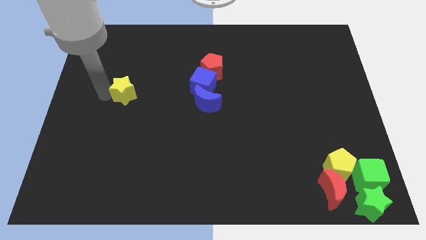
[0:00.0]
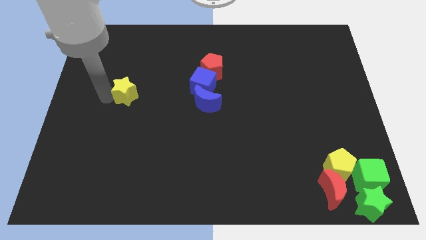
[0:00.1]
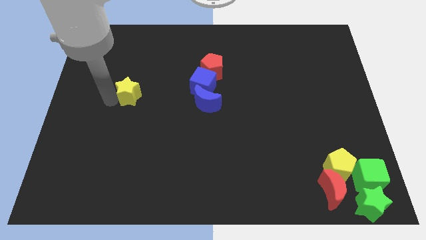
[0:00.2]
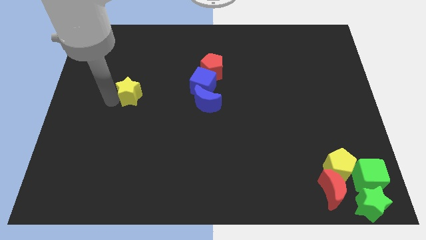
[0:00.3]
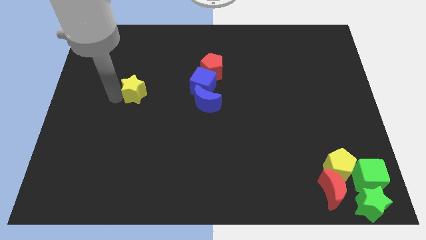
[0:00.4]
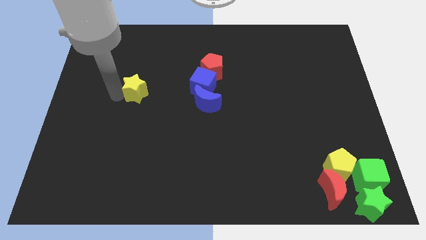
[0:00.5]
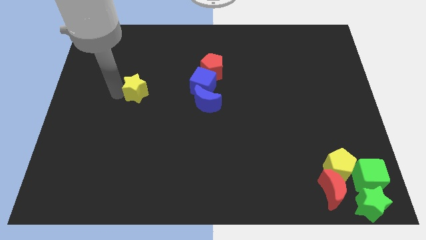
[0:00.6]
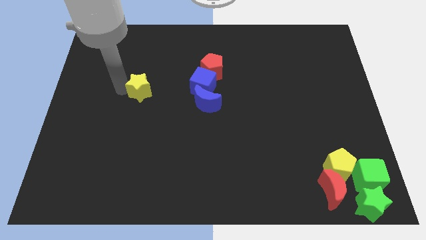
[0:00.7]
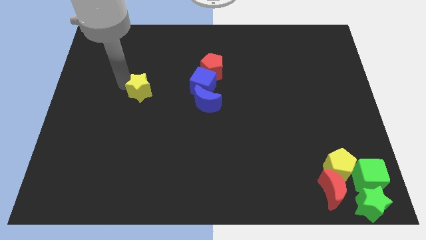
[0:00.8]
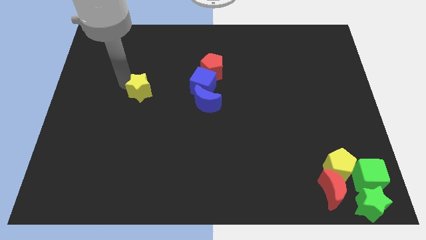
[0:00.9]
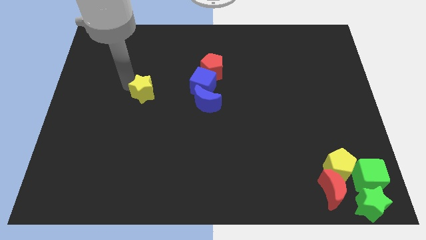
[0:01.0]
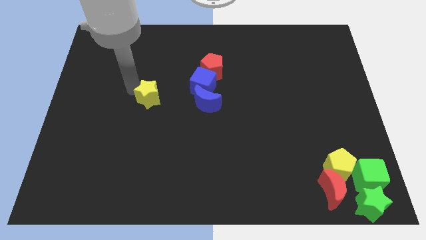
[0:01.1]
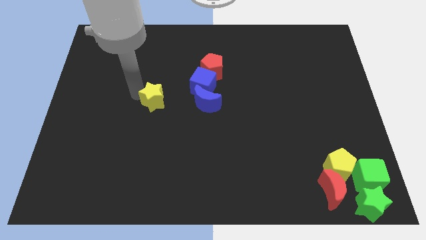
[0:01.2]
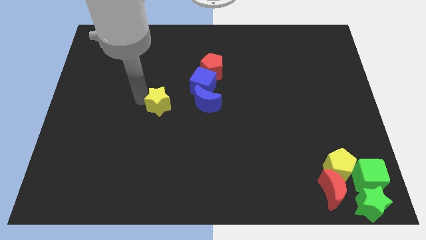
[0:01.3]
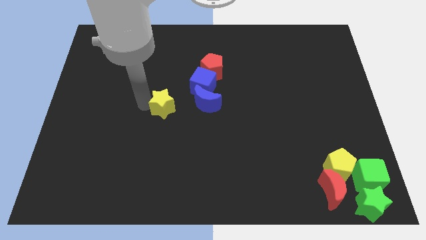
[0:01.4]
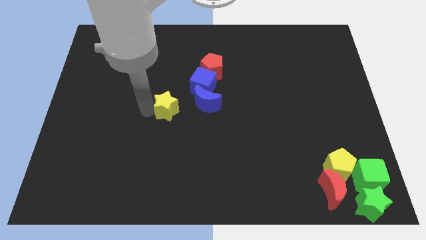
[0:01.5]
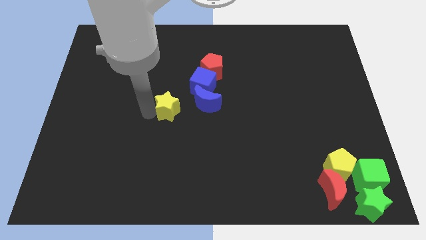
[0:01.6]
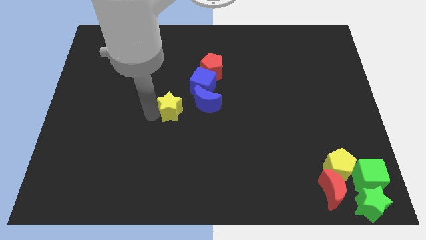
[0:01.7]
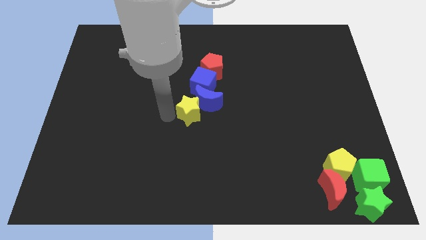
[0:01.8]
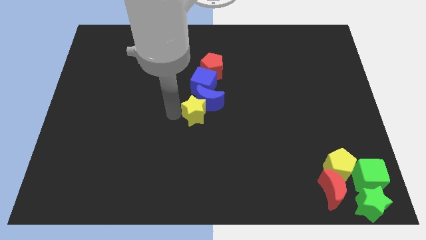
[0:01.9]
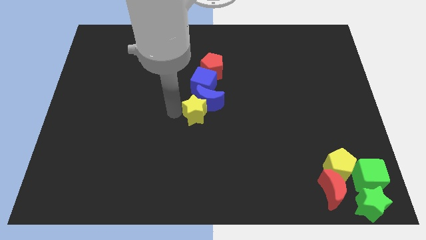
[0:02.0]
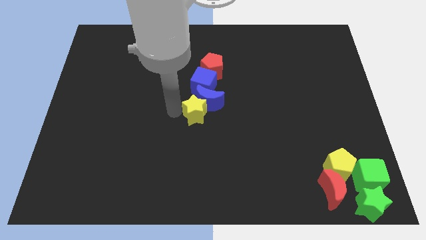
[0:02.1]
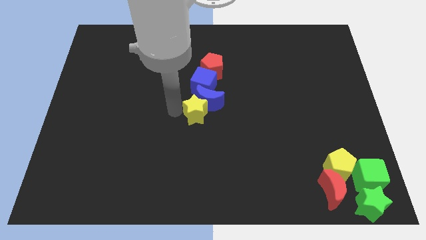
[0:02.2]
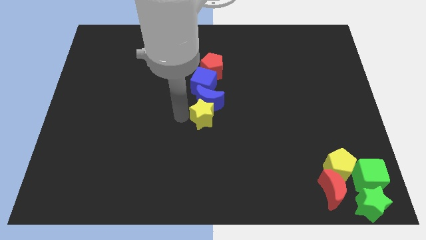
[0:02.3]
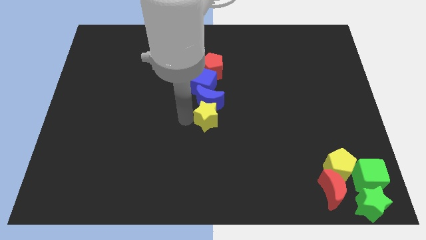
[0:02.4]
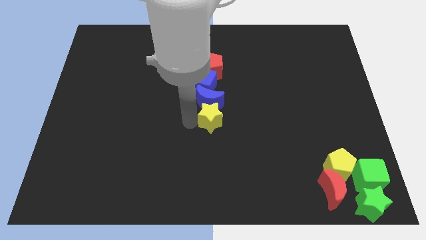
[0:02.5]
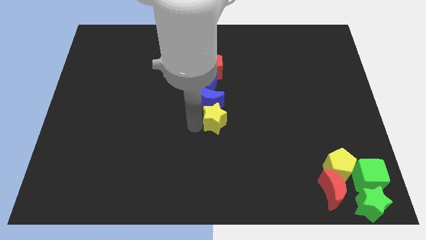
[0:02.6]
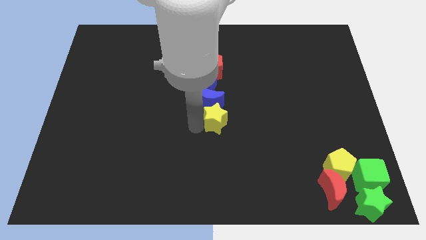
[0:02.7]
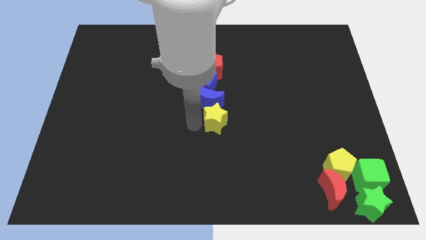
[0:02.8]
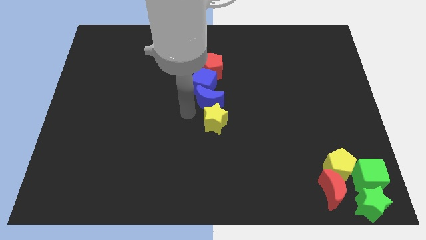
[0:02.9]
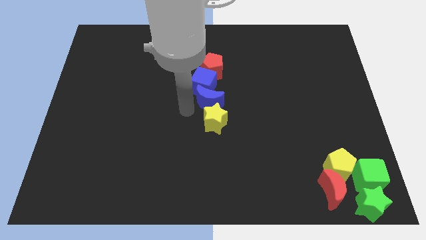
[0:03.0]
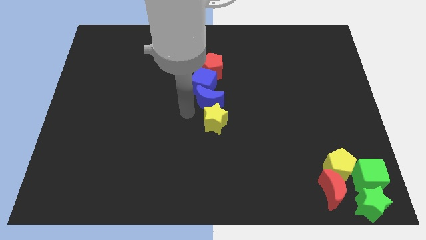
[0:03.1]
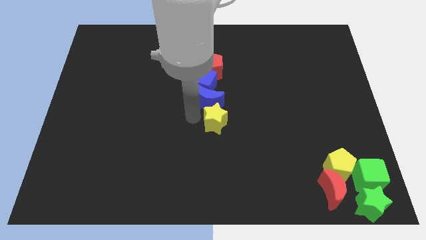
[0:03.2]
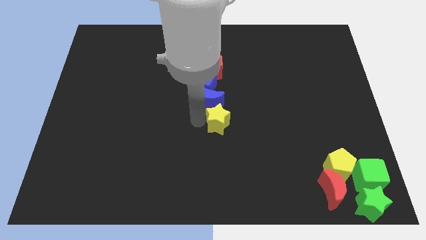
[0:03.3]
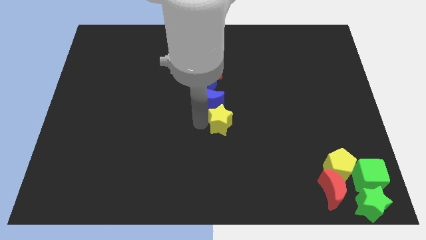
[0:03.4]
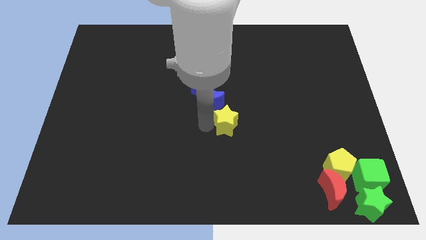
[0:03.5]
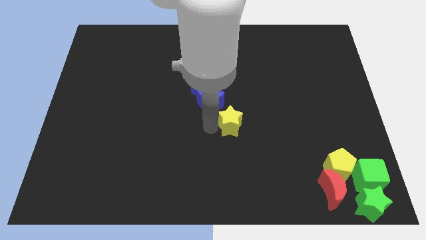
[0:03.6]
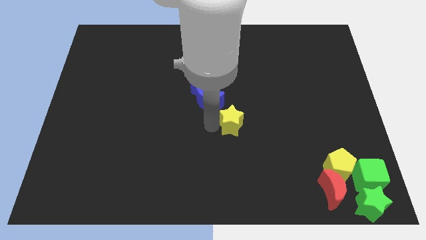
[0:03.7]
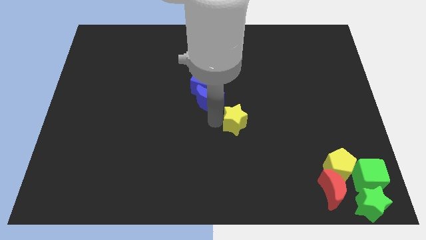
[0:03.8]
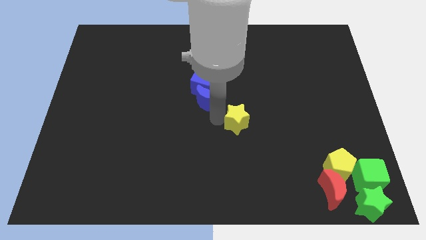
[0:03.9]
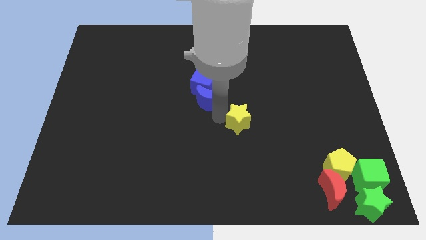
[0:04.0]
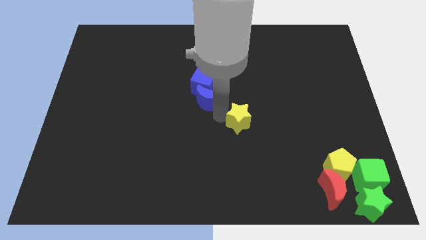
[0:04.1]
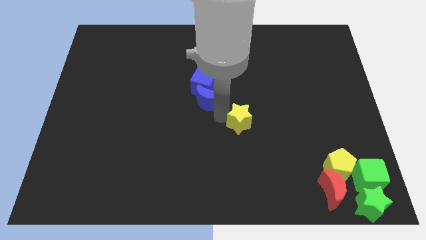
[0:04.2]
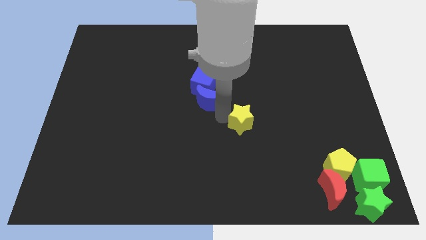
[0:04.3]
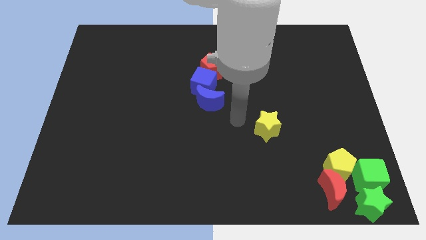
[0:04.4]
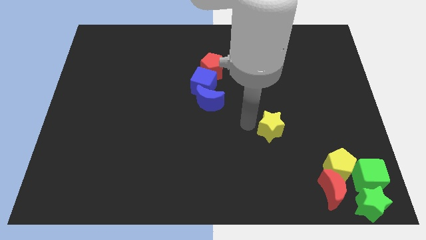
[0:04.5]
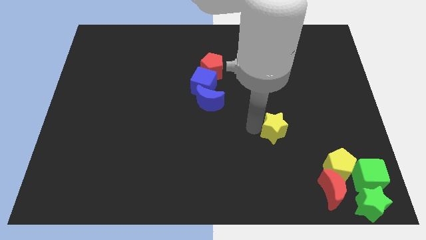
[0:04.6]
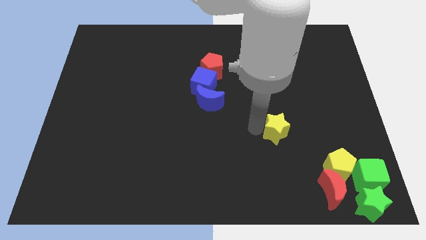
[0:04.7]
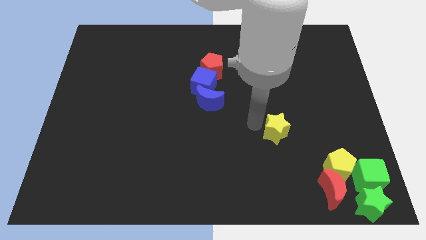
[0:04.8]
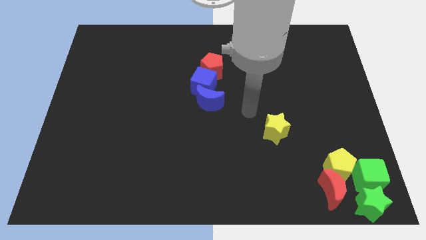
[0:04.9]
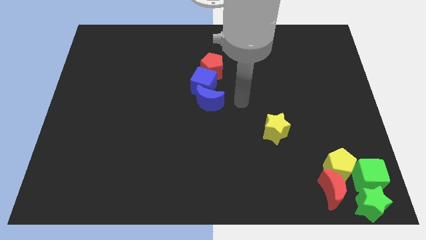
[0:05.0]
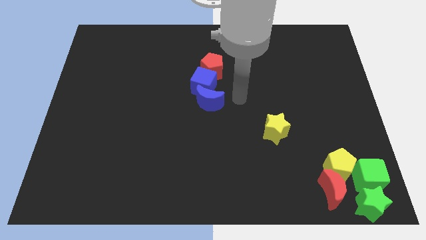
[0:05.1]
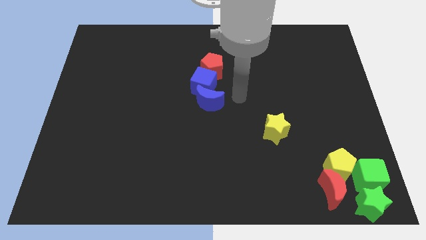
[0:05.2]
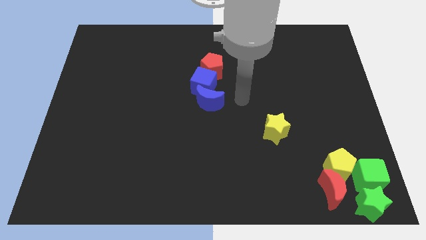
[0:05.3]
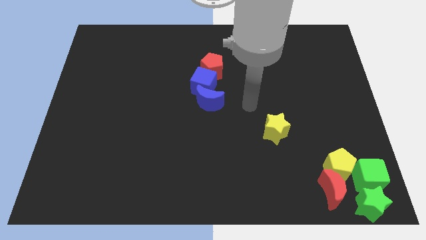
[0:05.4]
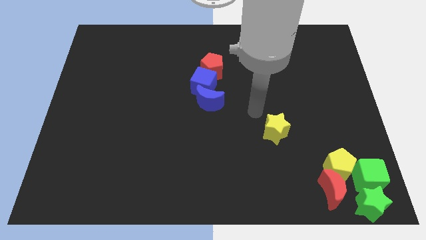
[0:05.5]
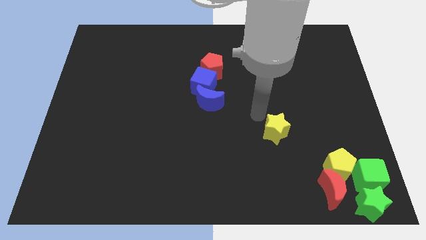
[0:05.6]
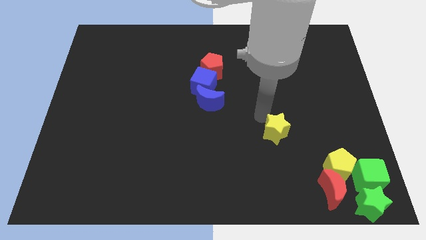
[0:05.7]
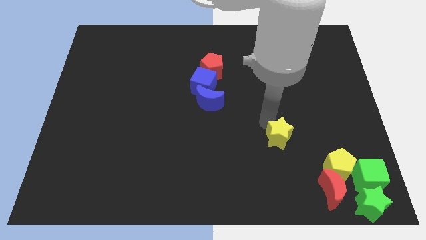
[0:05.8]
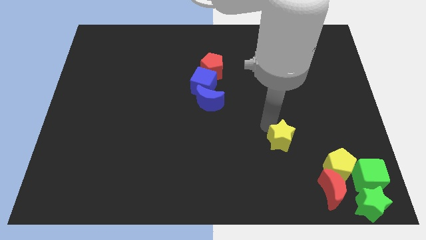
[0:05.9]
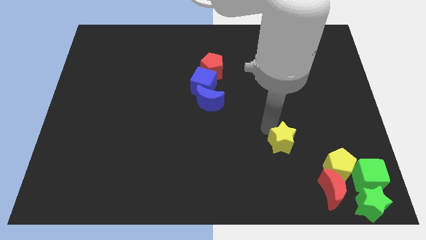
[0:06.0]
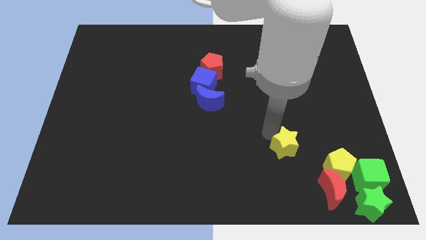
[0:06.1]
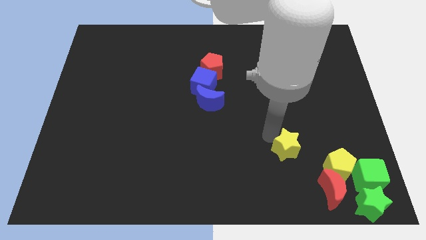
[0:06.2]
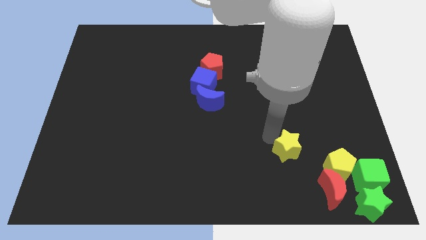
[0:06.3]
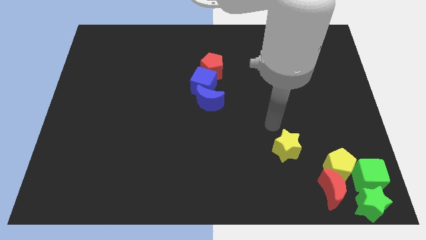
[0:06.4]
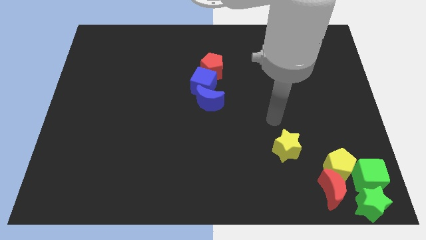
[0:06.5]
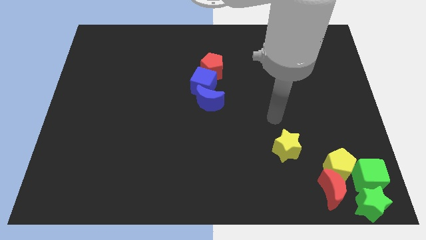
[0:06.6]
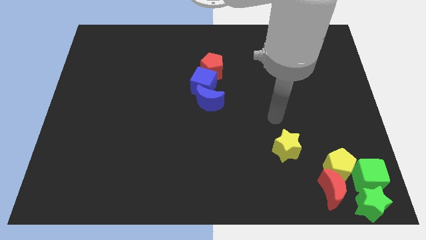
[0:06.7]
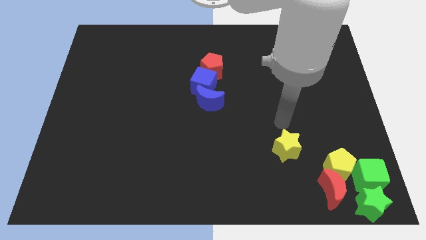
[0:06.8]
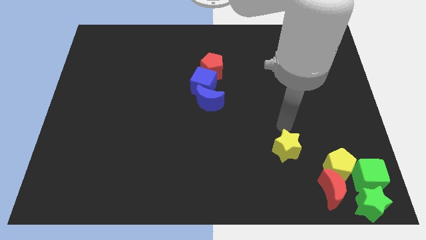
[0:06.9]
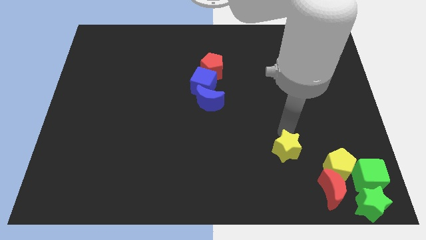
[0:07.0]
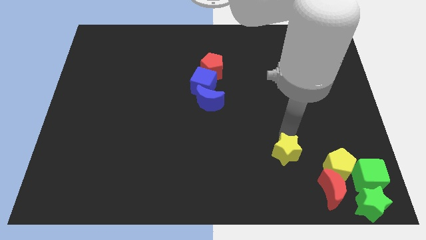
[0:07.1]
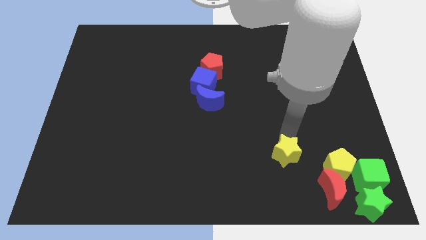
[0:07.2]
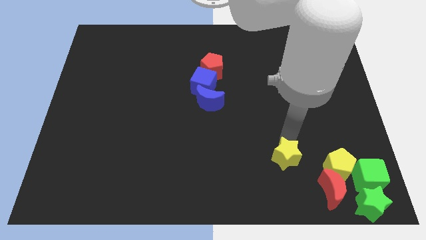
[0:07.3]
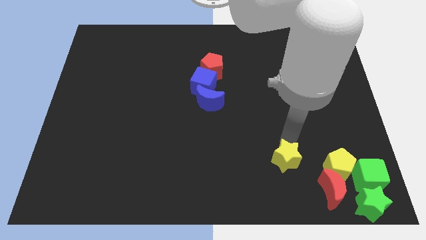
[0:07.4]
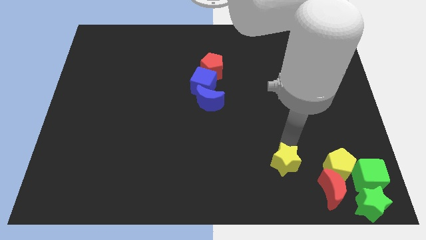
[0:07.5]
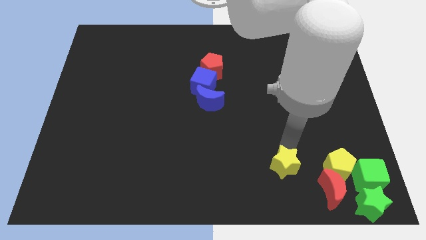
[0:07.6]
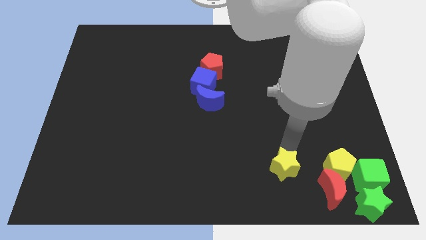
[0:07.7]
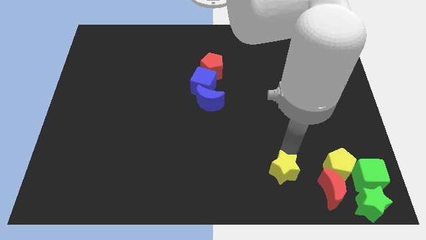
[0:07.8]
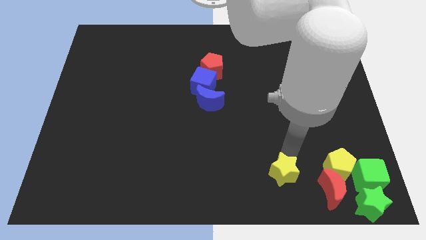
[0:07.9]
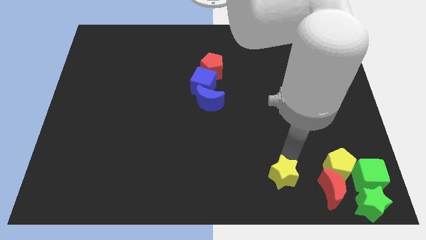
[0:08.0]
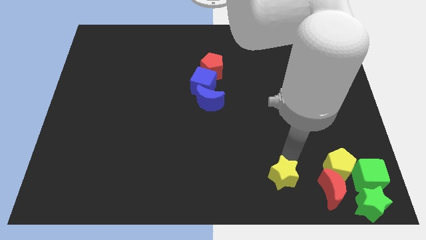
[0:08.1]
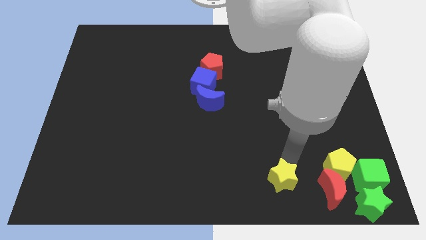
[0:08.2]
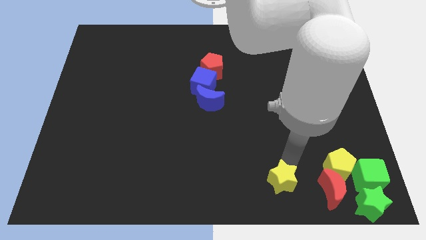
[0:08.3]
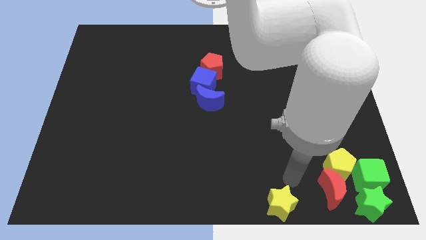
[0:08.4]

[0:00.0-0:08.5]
move yellow star towards bottom right side of the board

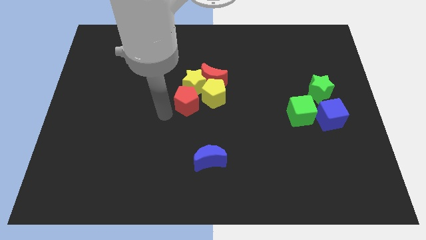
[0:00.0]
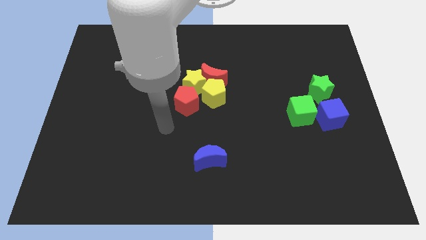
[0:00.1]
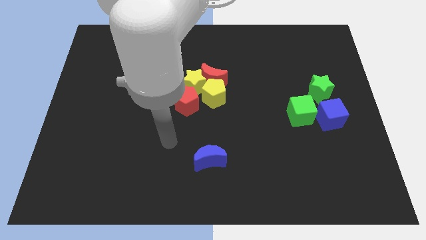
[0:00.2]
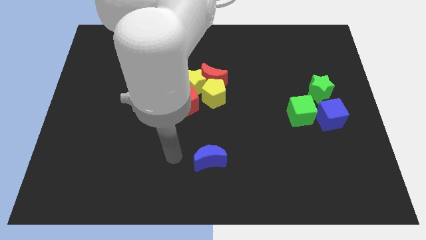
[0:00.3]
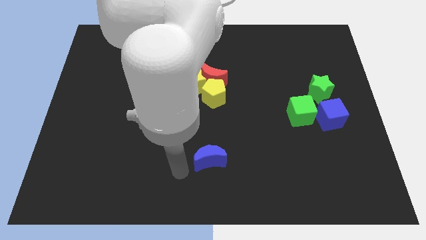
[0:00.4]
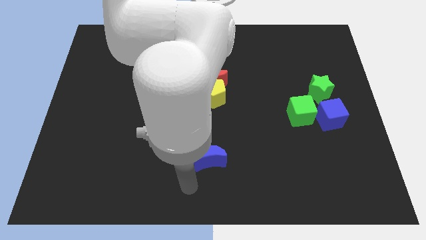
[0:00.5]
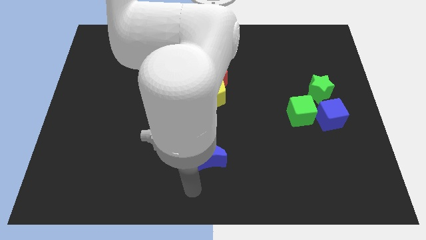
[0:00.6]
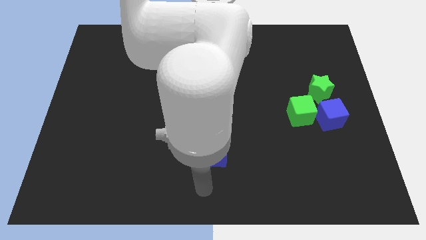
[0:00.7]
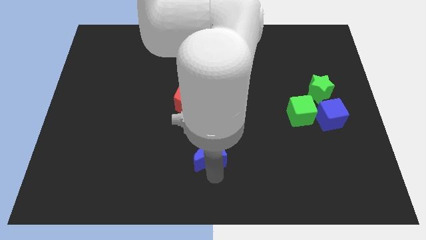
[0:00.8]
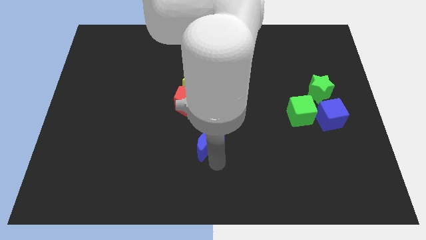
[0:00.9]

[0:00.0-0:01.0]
move the arm towards the bottom of the blue crescent
